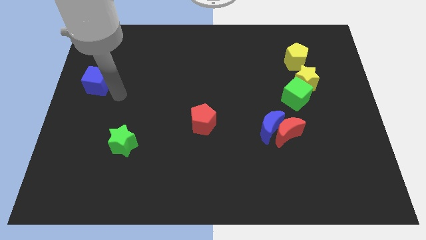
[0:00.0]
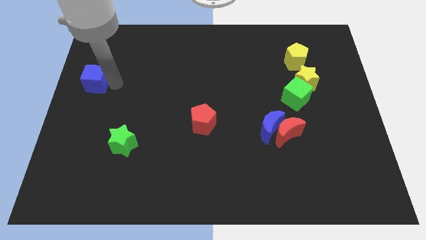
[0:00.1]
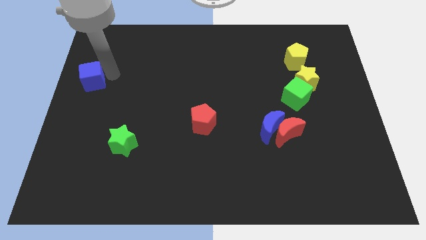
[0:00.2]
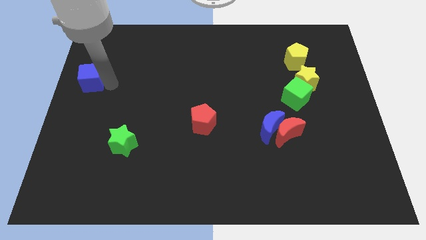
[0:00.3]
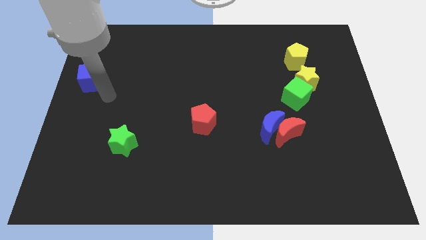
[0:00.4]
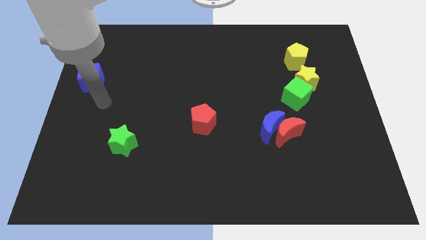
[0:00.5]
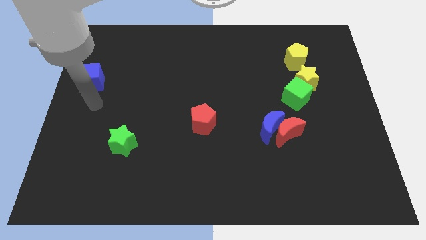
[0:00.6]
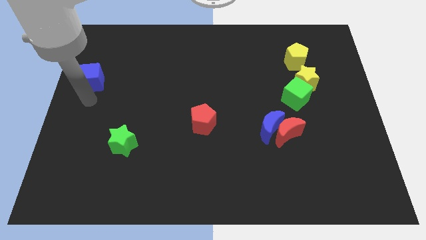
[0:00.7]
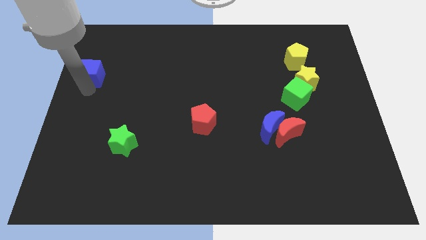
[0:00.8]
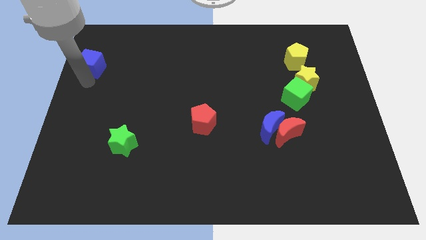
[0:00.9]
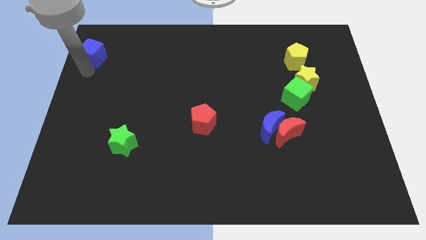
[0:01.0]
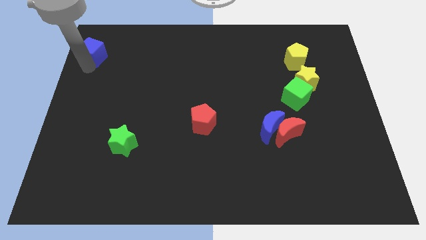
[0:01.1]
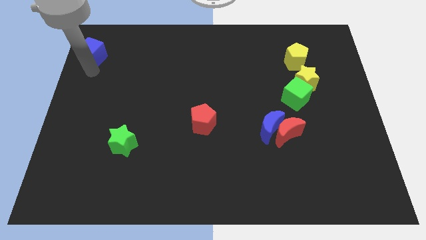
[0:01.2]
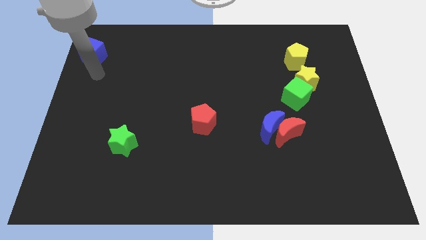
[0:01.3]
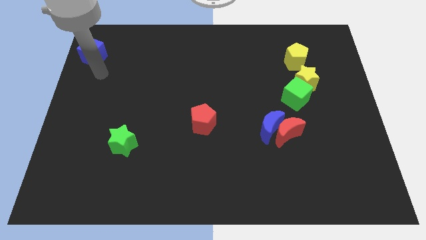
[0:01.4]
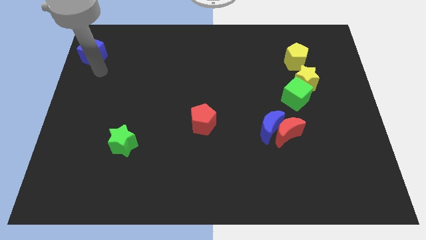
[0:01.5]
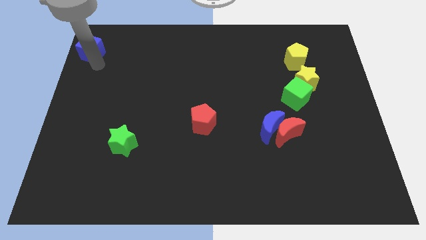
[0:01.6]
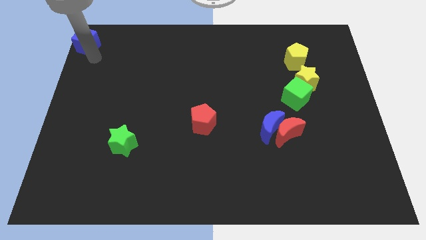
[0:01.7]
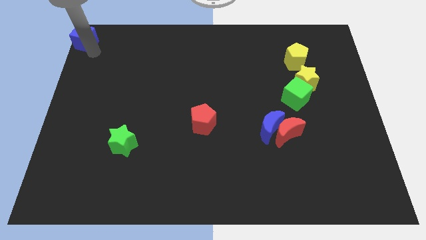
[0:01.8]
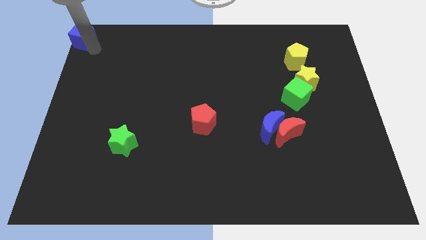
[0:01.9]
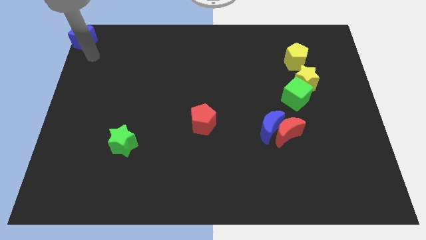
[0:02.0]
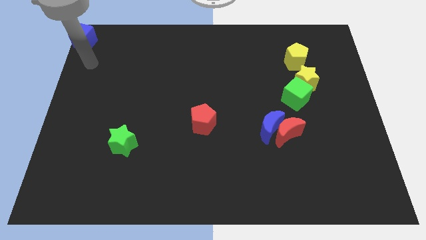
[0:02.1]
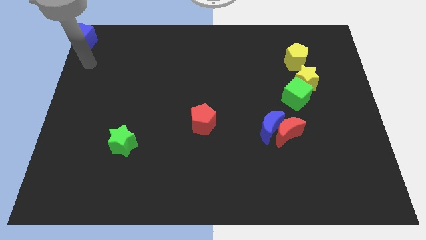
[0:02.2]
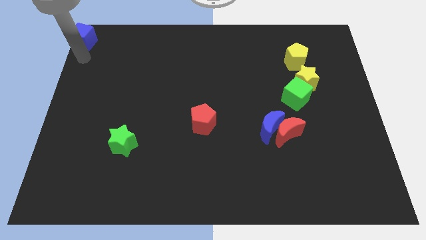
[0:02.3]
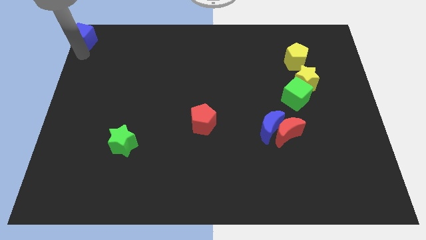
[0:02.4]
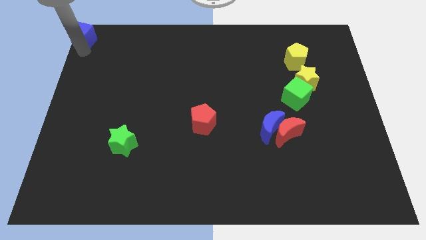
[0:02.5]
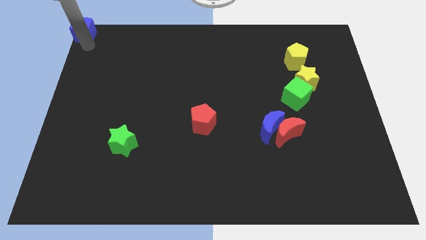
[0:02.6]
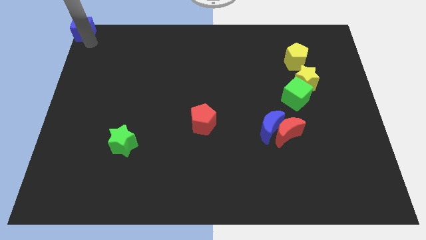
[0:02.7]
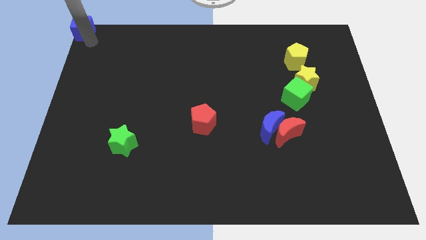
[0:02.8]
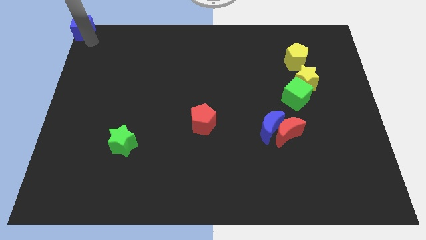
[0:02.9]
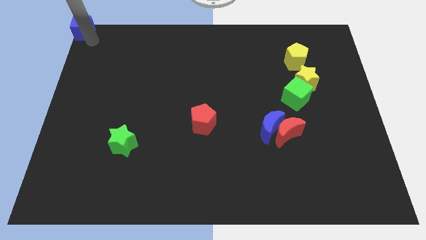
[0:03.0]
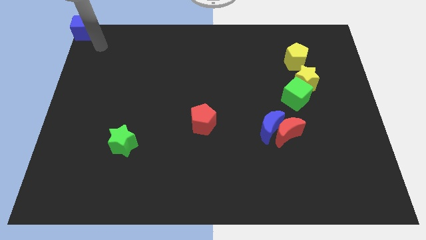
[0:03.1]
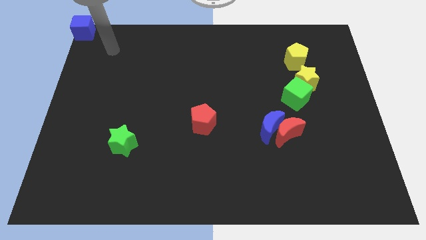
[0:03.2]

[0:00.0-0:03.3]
move blue cube to the top left corner

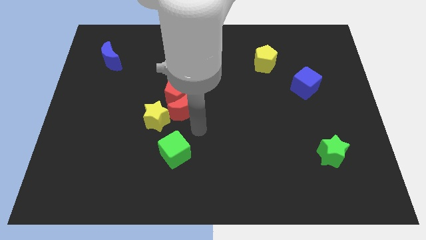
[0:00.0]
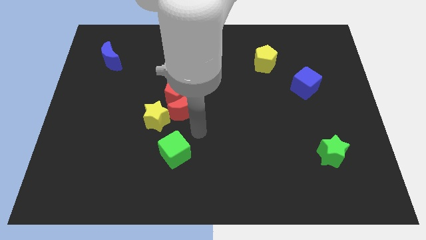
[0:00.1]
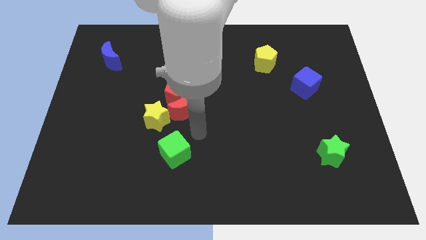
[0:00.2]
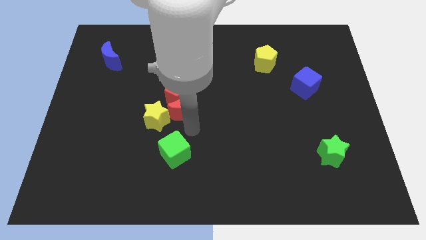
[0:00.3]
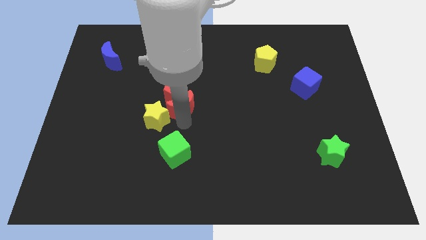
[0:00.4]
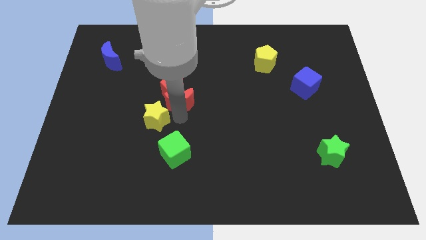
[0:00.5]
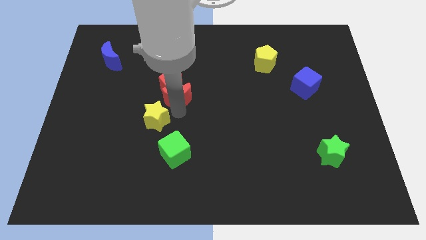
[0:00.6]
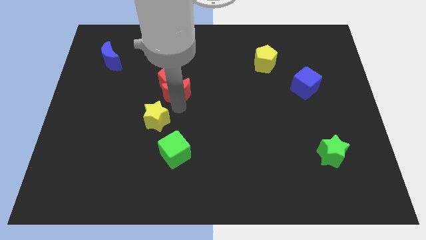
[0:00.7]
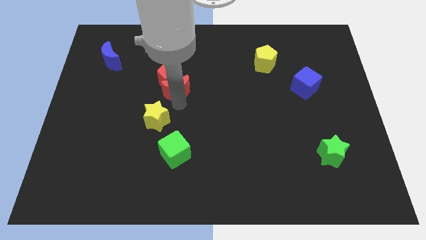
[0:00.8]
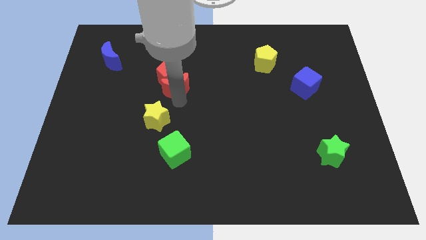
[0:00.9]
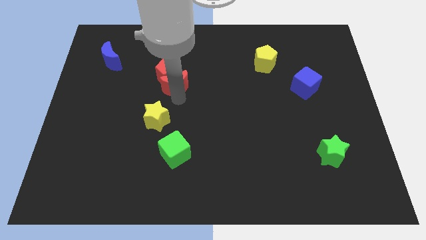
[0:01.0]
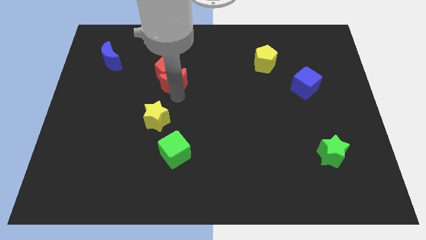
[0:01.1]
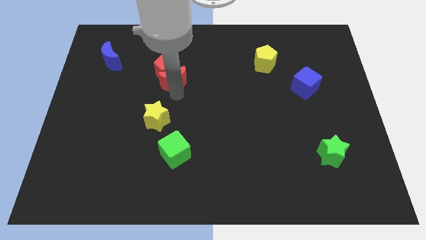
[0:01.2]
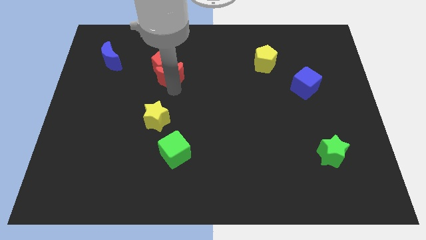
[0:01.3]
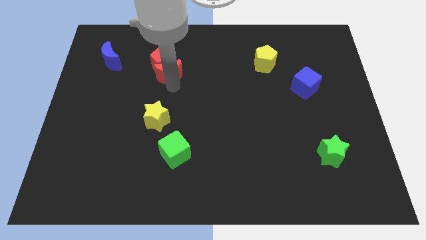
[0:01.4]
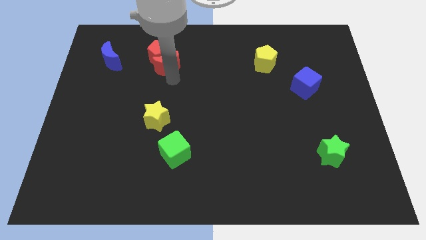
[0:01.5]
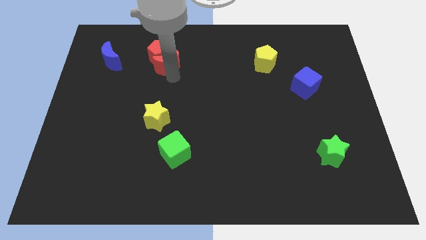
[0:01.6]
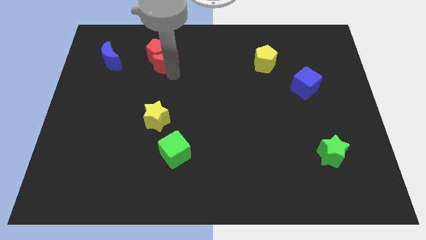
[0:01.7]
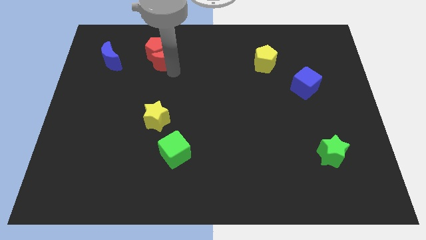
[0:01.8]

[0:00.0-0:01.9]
slide the red blocks to the top center

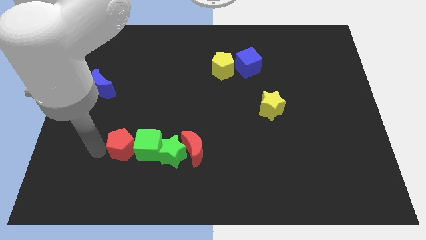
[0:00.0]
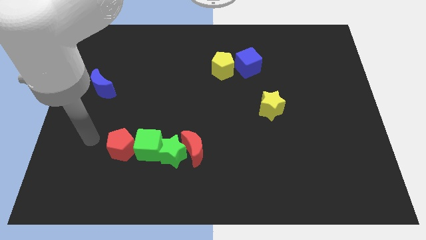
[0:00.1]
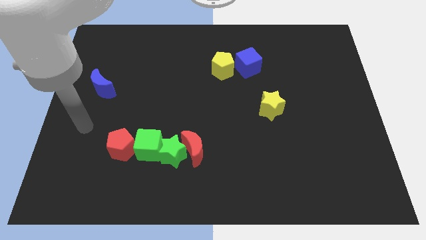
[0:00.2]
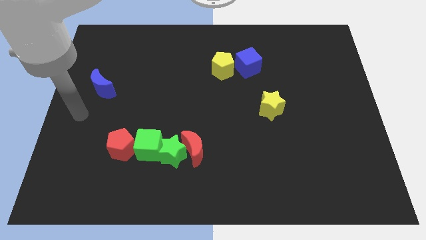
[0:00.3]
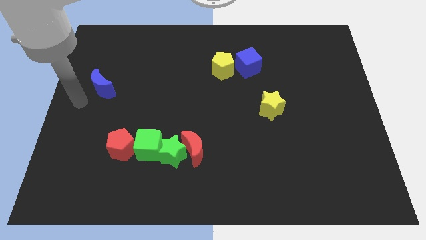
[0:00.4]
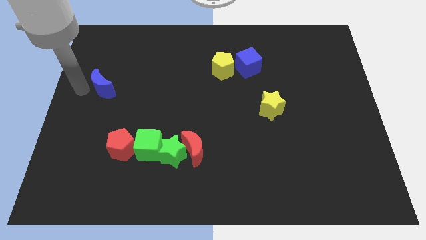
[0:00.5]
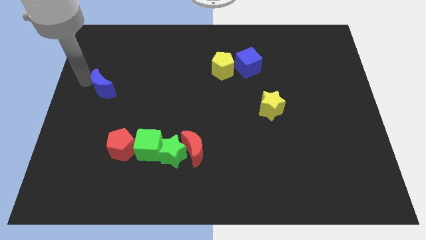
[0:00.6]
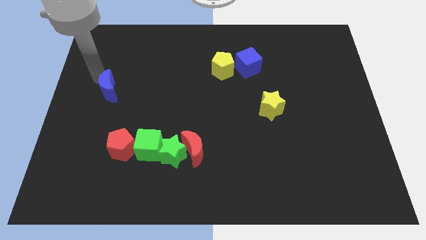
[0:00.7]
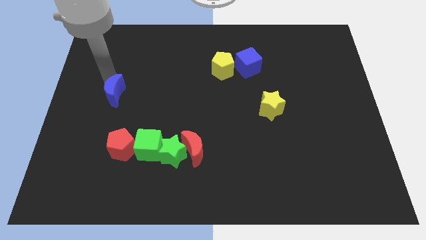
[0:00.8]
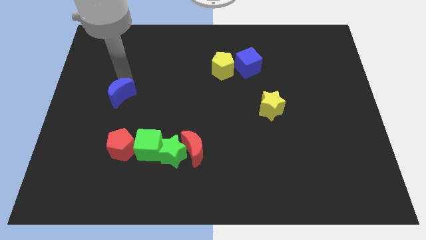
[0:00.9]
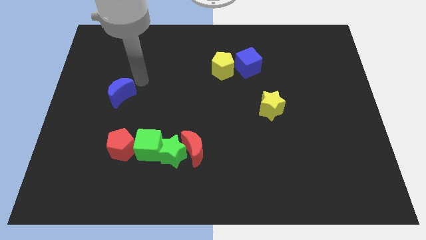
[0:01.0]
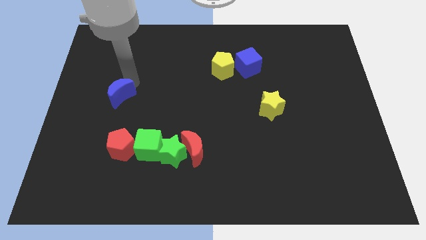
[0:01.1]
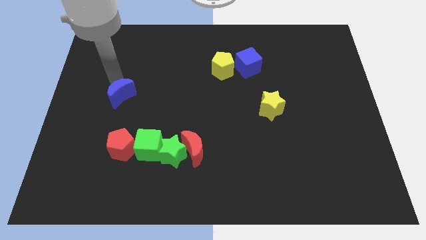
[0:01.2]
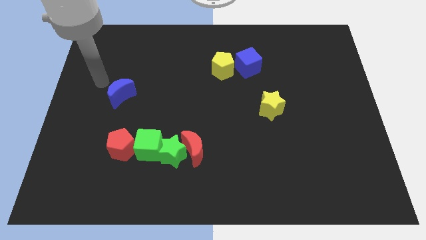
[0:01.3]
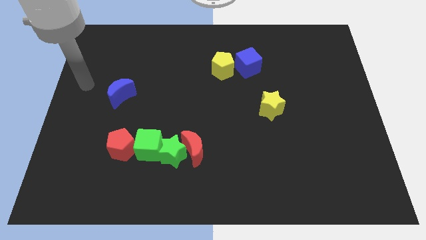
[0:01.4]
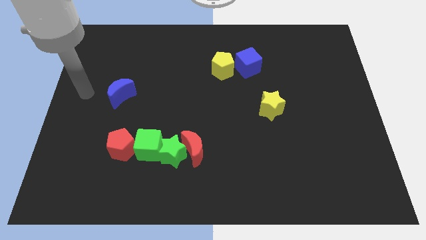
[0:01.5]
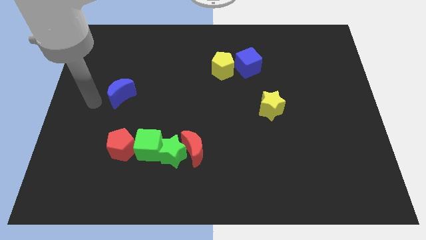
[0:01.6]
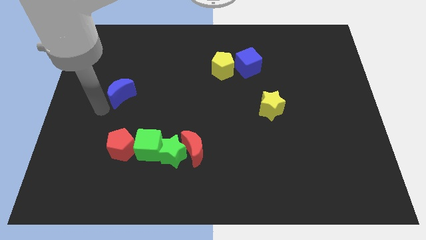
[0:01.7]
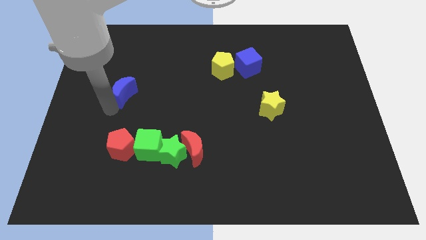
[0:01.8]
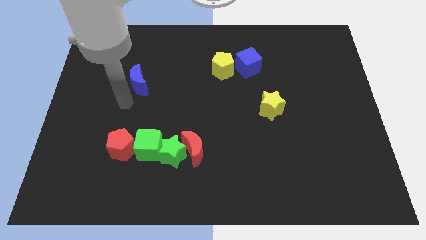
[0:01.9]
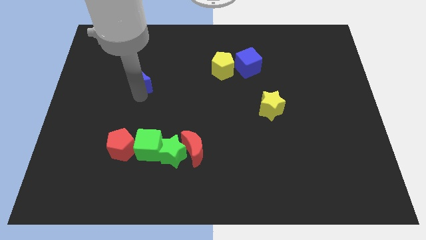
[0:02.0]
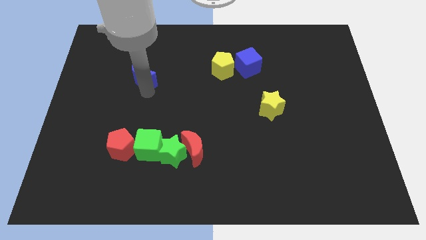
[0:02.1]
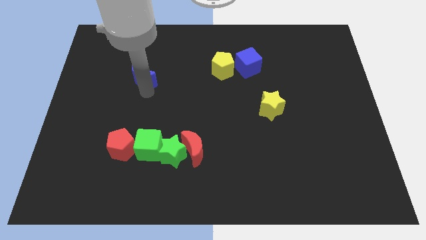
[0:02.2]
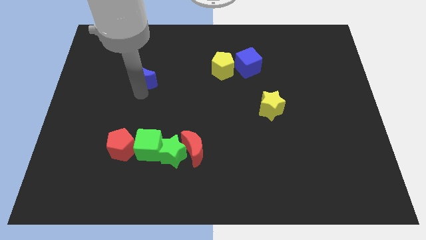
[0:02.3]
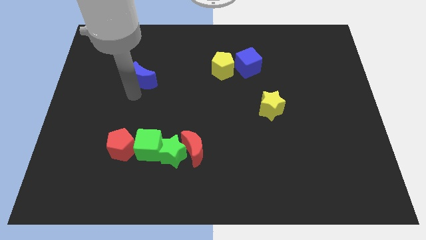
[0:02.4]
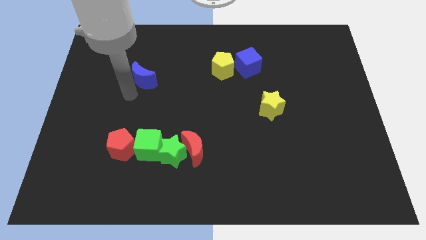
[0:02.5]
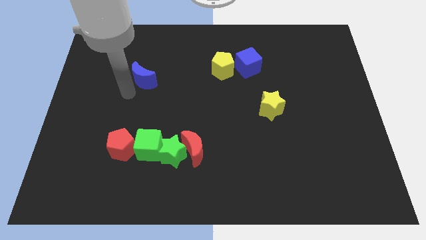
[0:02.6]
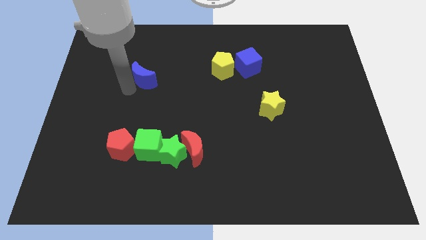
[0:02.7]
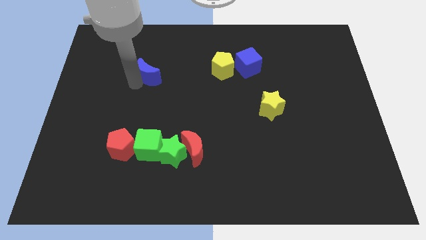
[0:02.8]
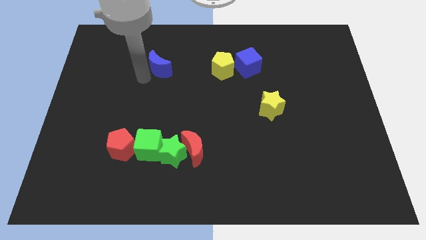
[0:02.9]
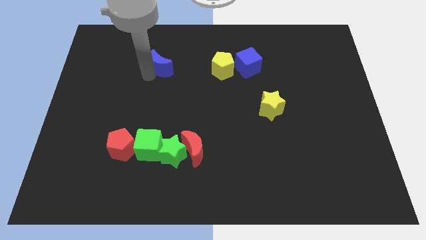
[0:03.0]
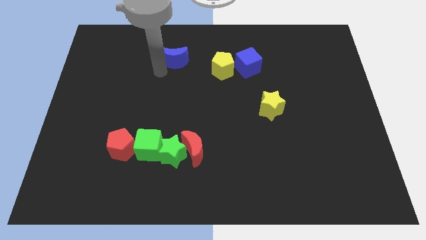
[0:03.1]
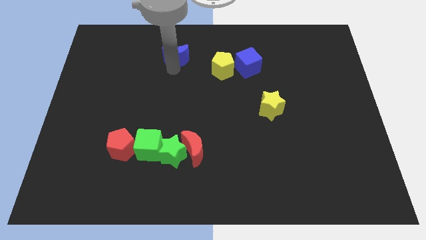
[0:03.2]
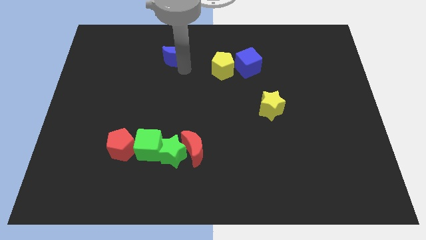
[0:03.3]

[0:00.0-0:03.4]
drag the blue moon towards the top center

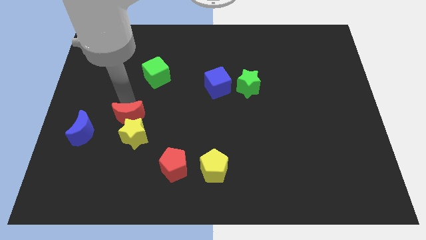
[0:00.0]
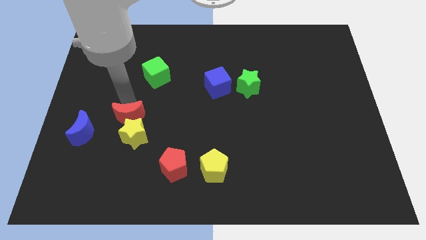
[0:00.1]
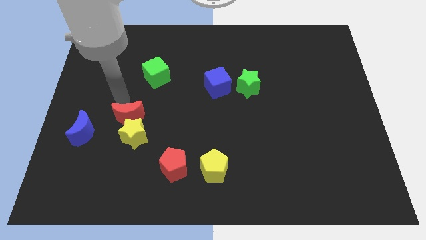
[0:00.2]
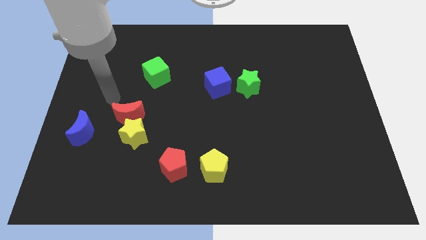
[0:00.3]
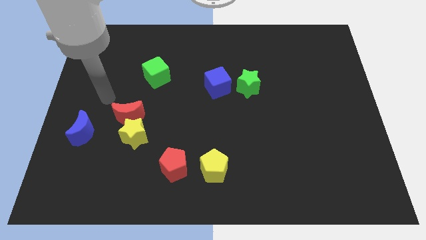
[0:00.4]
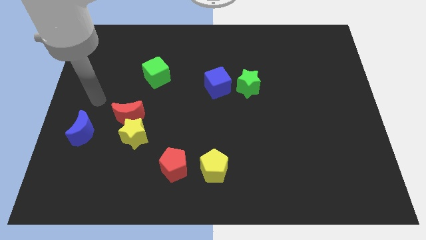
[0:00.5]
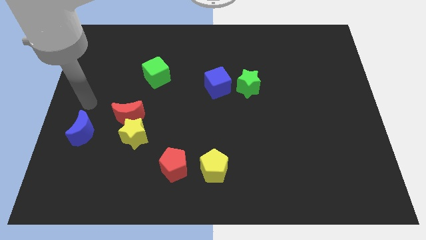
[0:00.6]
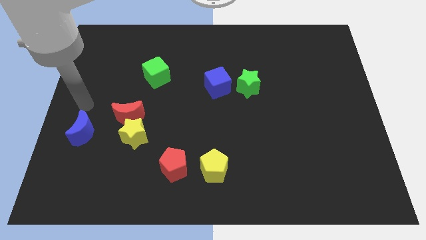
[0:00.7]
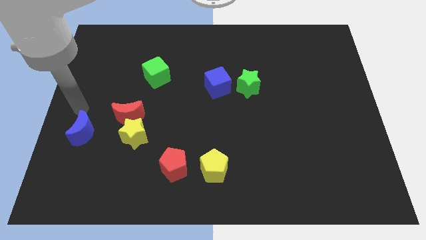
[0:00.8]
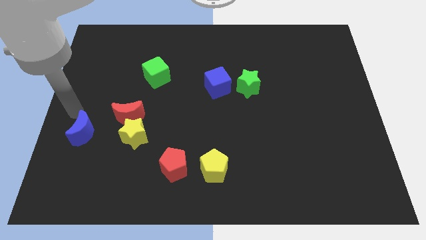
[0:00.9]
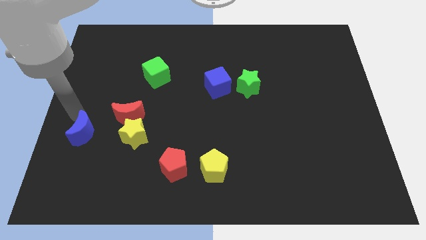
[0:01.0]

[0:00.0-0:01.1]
move your arm away from red moon
